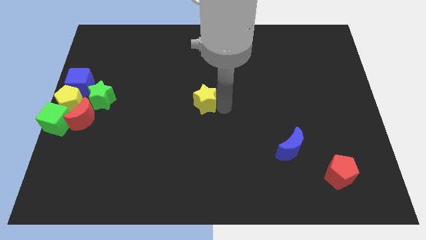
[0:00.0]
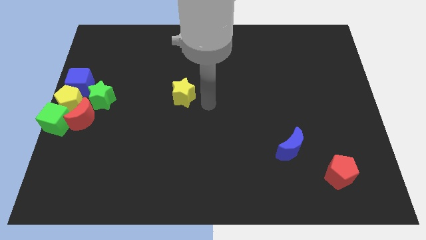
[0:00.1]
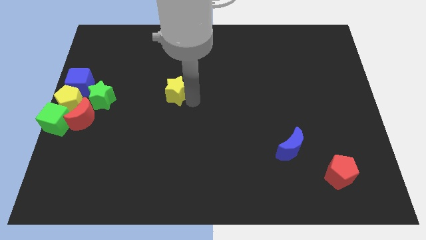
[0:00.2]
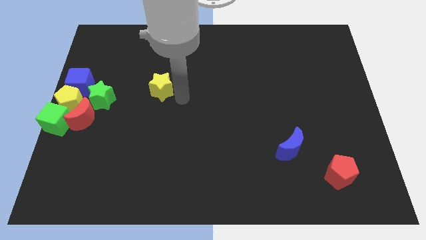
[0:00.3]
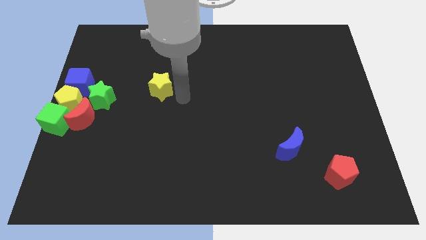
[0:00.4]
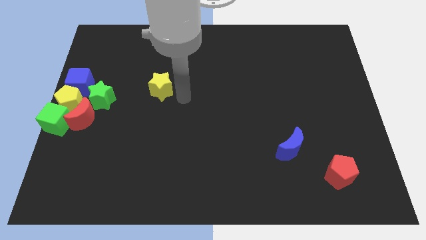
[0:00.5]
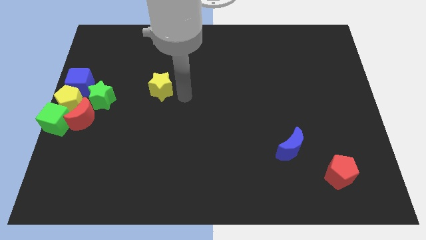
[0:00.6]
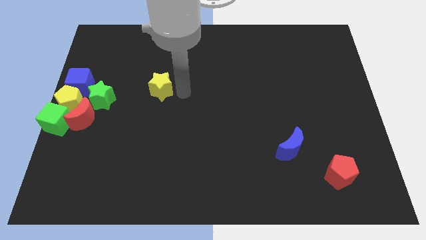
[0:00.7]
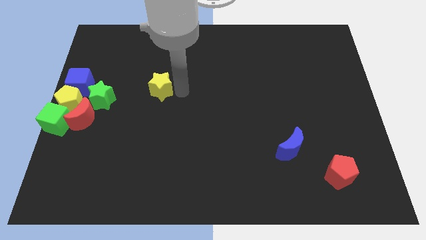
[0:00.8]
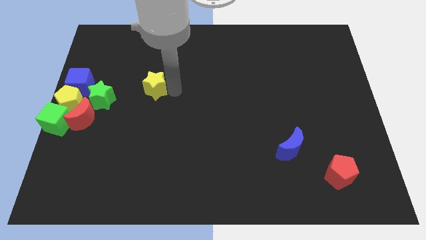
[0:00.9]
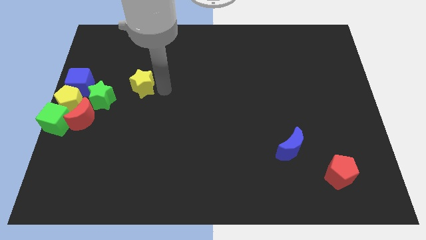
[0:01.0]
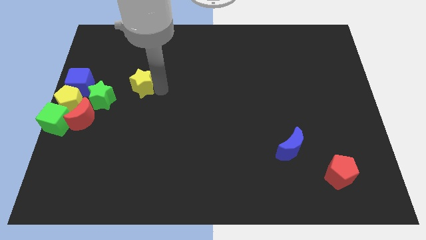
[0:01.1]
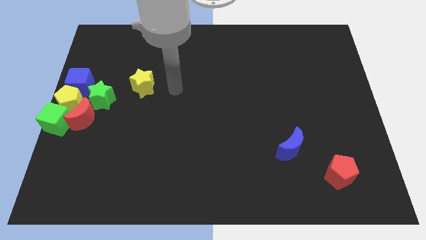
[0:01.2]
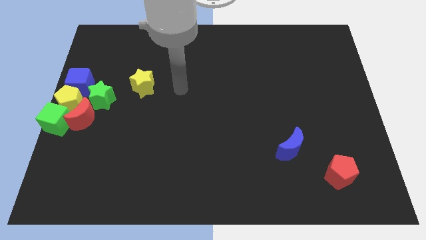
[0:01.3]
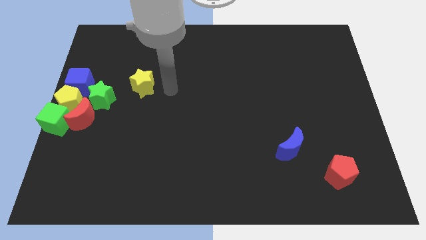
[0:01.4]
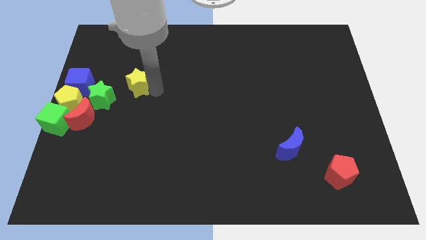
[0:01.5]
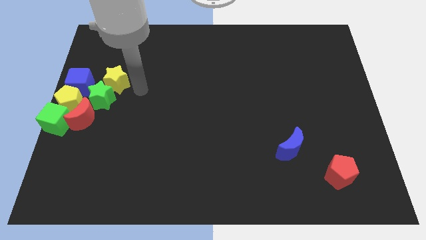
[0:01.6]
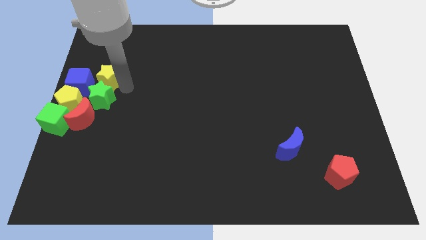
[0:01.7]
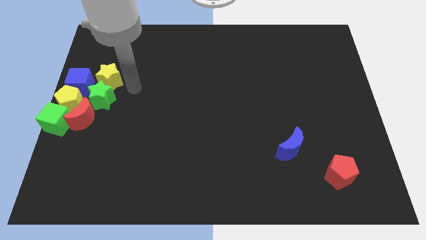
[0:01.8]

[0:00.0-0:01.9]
slide the yellow star to the top side of the green star

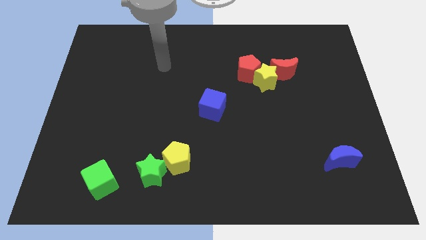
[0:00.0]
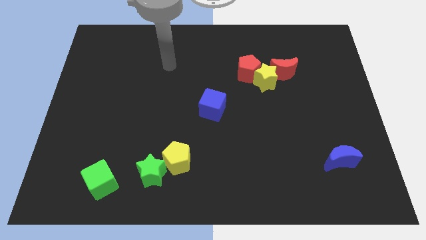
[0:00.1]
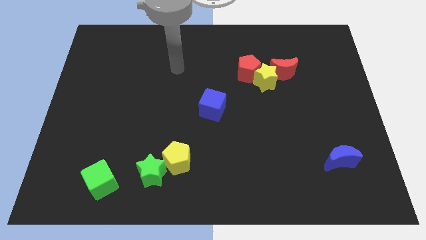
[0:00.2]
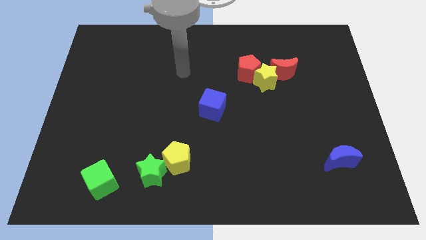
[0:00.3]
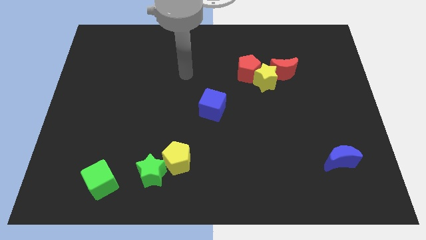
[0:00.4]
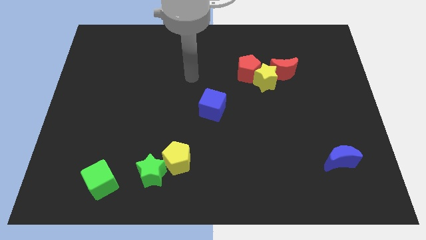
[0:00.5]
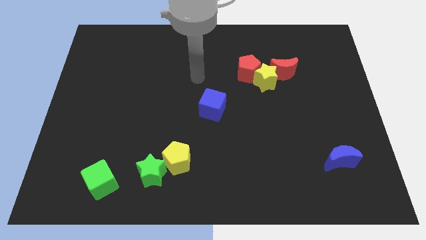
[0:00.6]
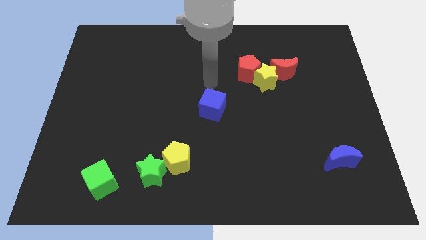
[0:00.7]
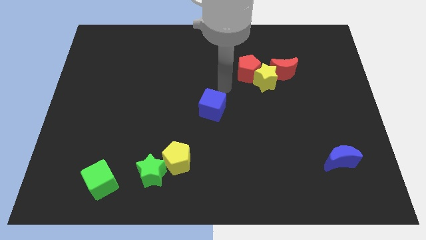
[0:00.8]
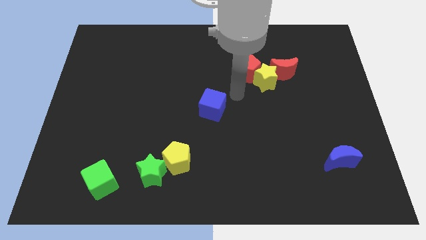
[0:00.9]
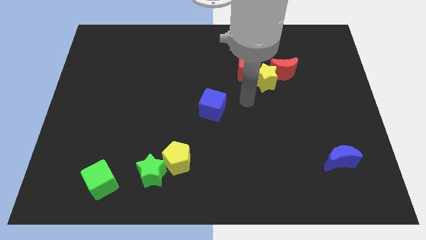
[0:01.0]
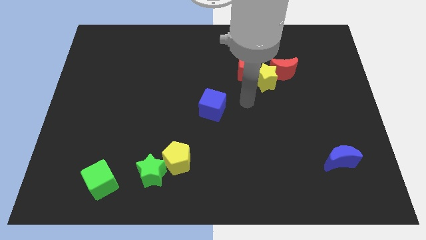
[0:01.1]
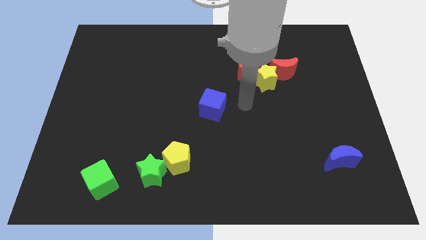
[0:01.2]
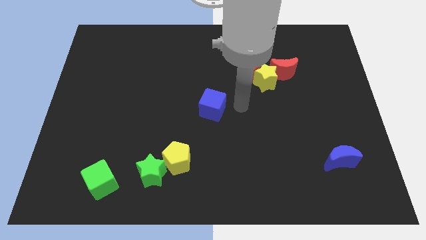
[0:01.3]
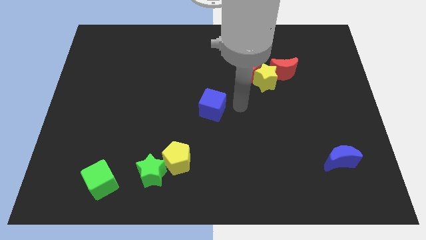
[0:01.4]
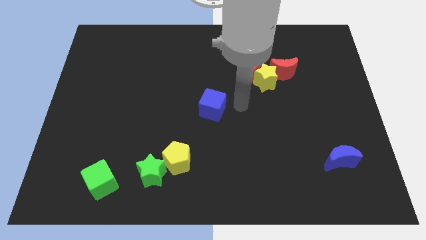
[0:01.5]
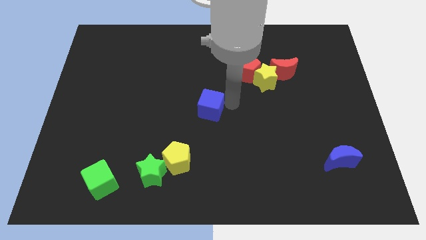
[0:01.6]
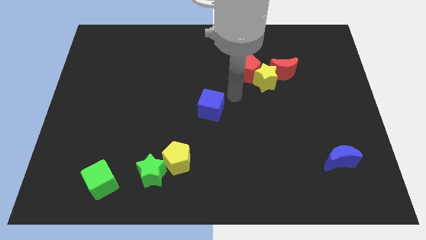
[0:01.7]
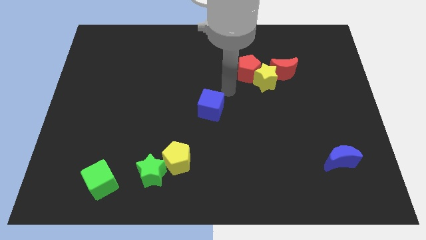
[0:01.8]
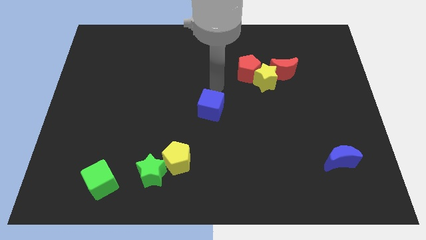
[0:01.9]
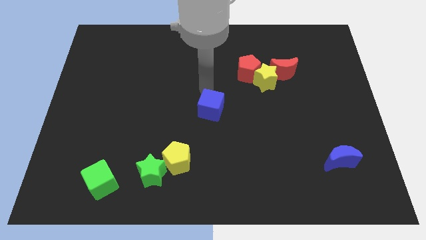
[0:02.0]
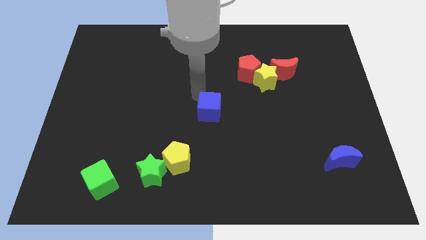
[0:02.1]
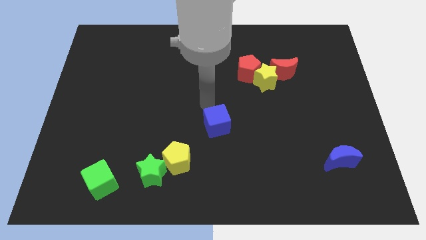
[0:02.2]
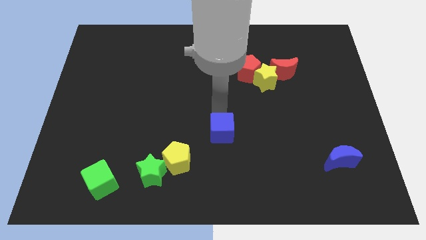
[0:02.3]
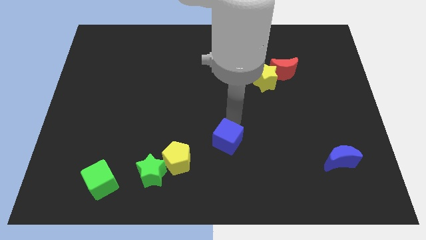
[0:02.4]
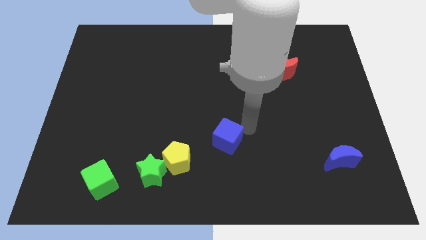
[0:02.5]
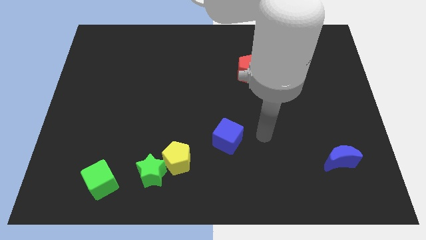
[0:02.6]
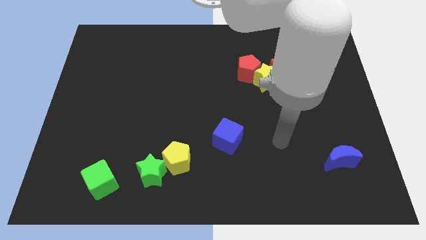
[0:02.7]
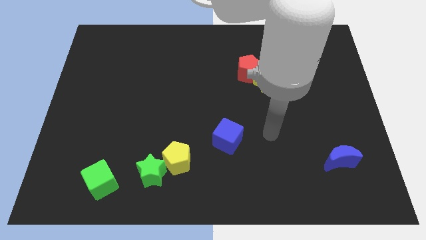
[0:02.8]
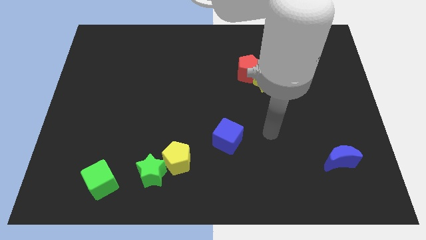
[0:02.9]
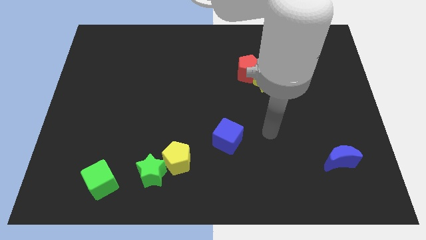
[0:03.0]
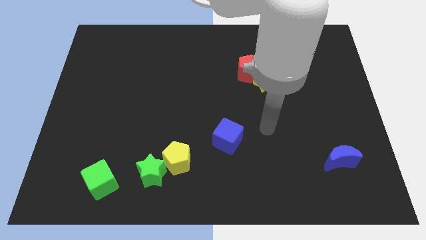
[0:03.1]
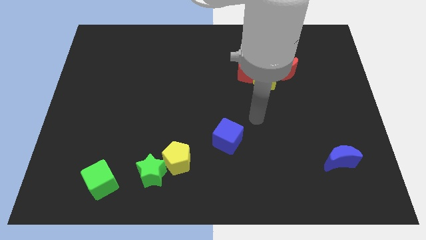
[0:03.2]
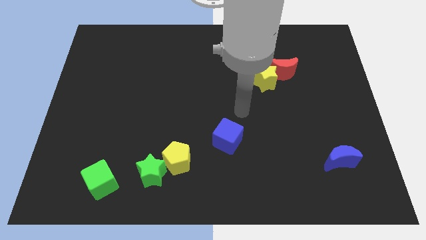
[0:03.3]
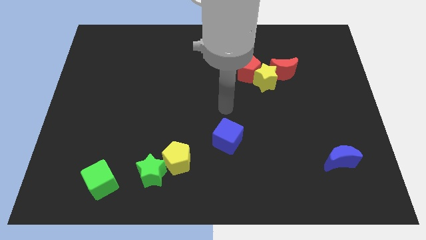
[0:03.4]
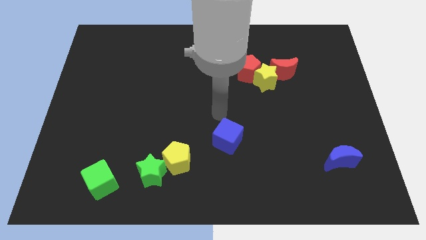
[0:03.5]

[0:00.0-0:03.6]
move the blue cube diagonally on the top right side of the yellow pentagon

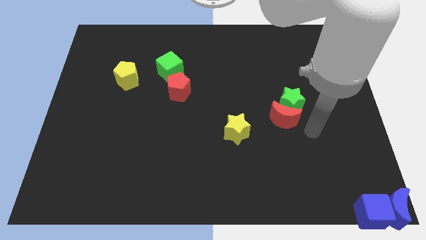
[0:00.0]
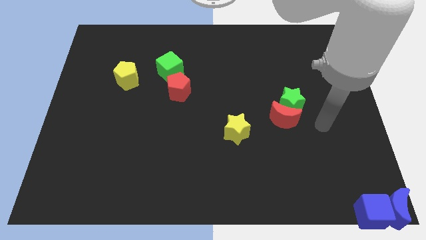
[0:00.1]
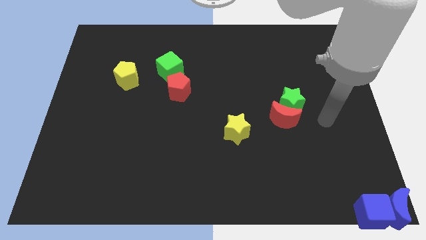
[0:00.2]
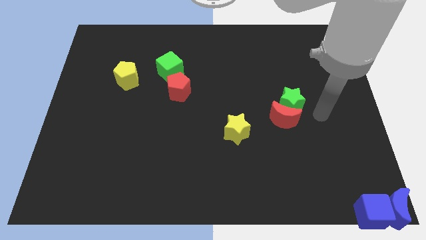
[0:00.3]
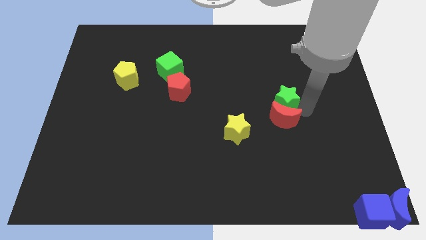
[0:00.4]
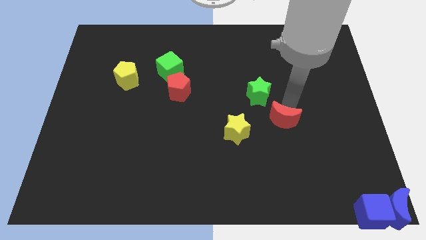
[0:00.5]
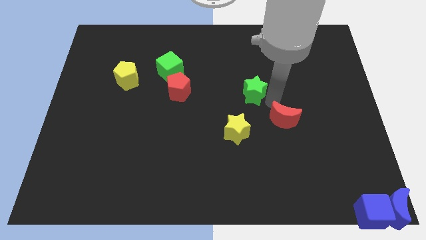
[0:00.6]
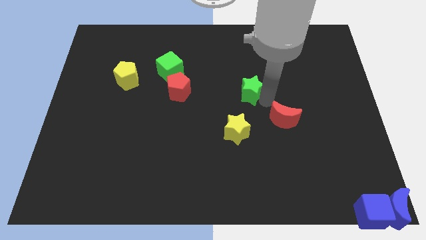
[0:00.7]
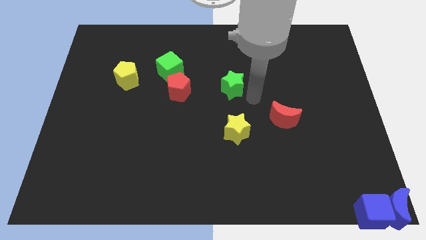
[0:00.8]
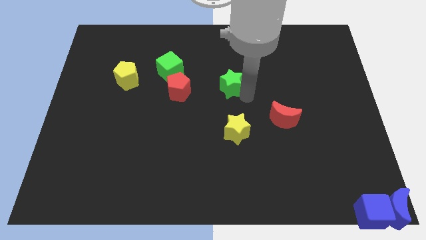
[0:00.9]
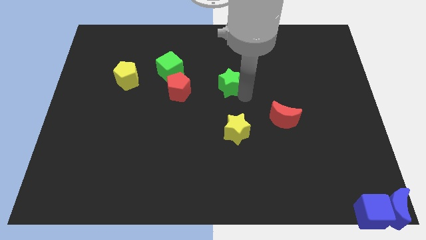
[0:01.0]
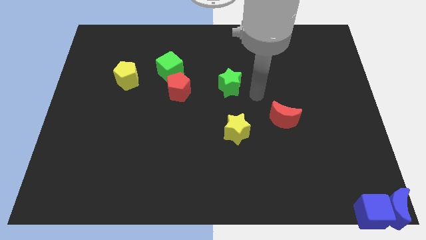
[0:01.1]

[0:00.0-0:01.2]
separate the green star from the red moon

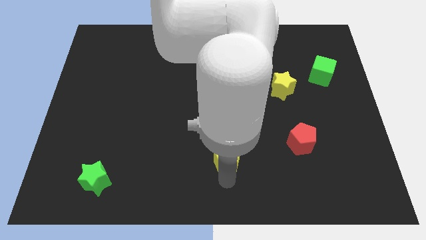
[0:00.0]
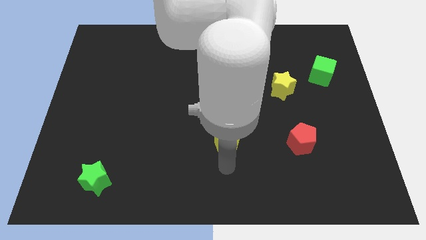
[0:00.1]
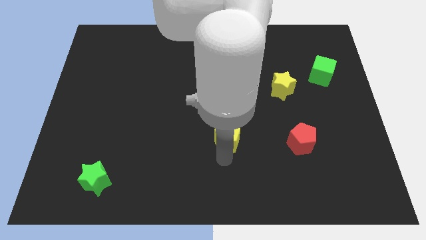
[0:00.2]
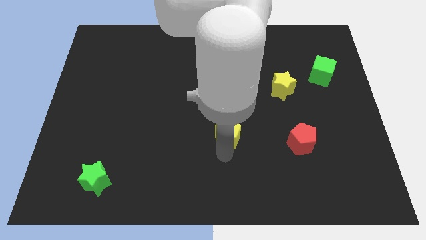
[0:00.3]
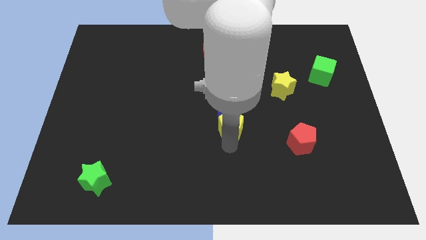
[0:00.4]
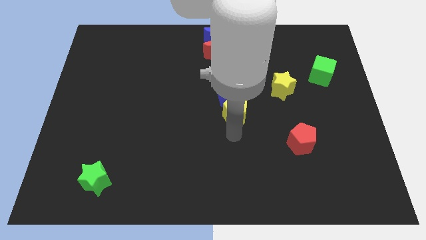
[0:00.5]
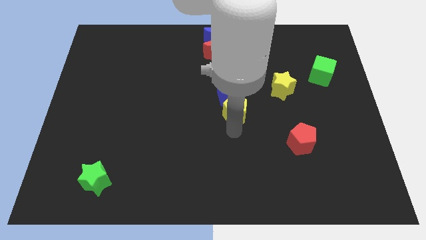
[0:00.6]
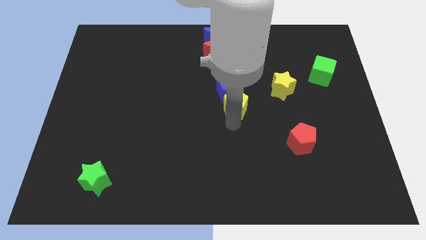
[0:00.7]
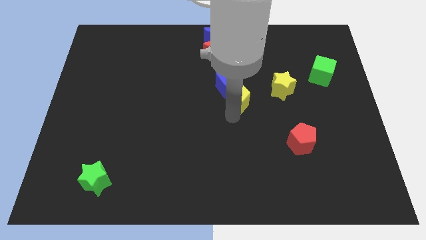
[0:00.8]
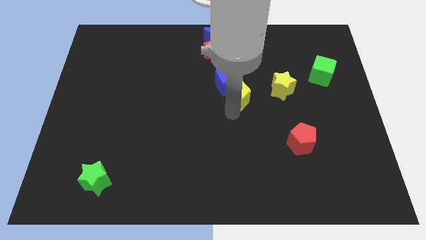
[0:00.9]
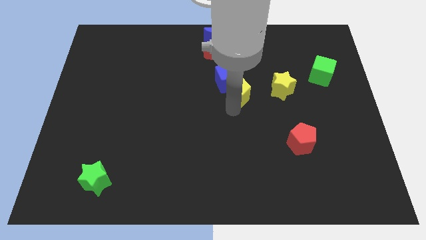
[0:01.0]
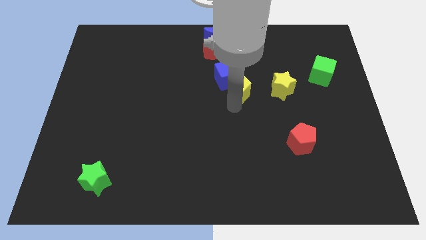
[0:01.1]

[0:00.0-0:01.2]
slide the yellow pentagon diagonally top left to the red pentagon

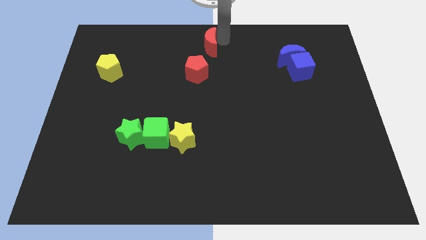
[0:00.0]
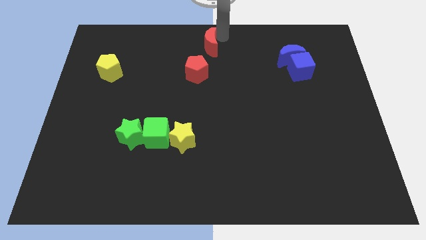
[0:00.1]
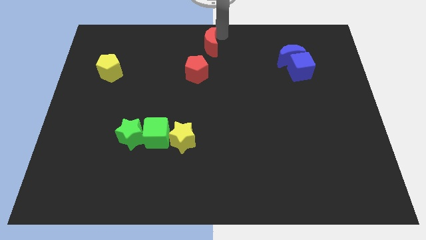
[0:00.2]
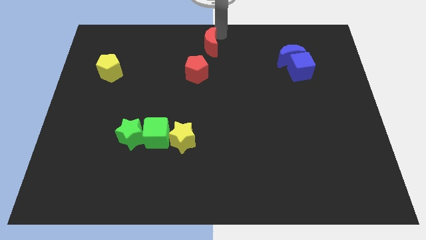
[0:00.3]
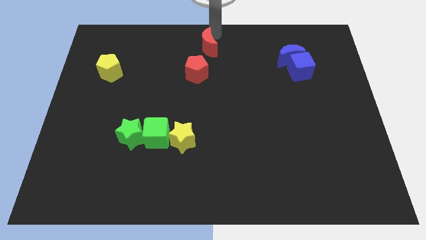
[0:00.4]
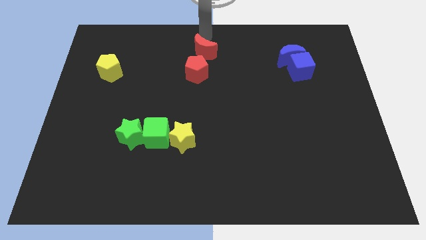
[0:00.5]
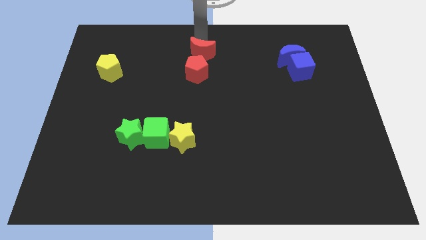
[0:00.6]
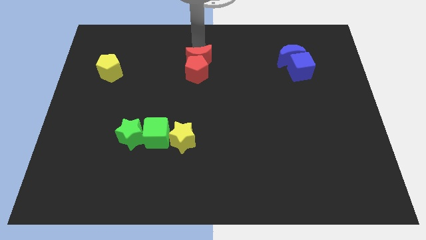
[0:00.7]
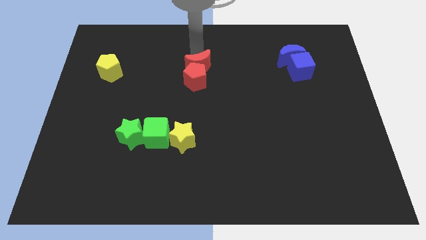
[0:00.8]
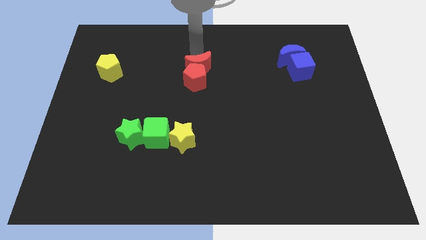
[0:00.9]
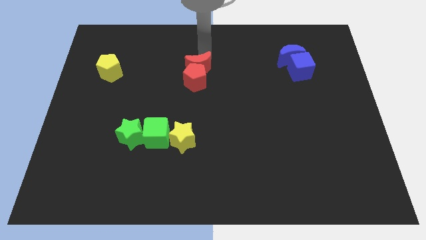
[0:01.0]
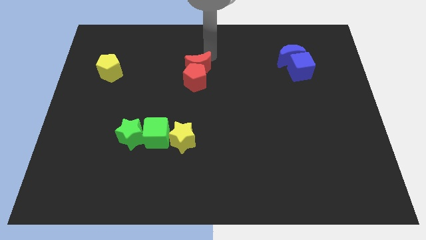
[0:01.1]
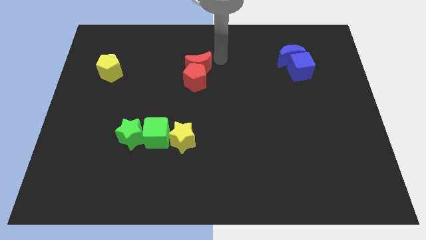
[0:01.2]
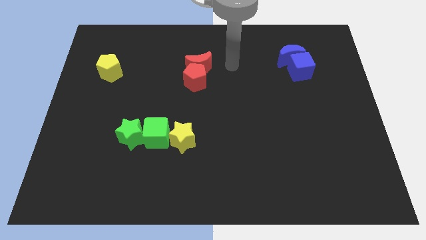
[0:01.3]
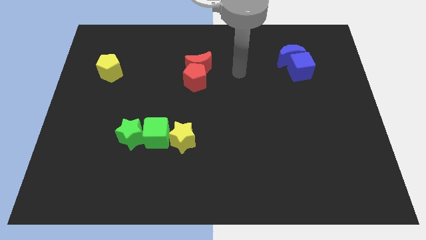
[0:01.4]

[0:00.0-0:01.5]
move the red moon into the red pentagon
